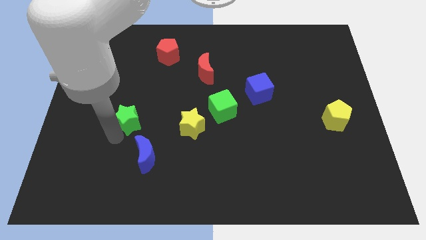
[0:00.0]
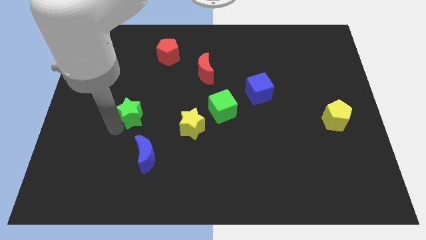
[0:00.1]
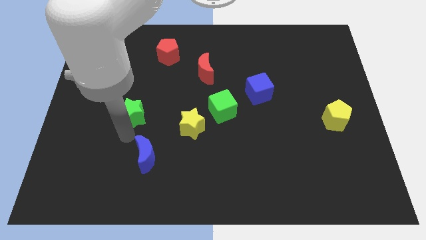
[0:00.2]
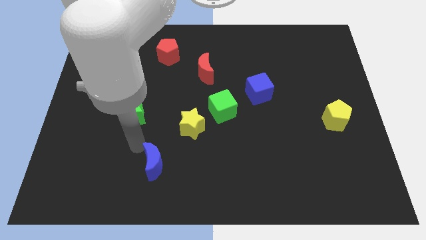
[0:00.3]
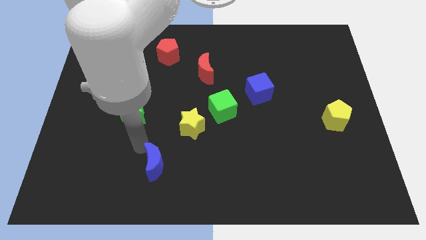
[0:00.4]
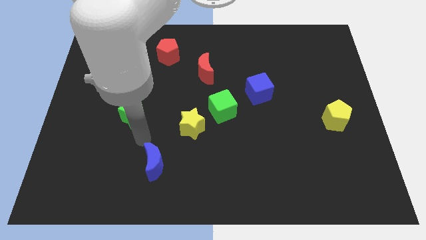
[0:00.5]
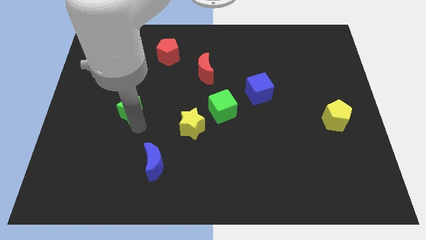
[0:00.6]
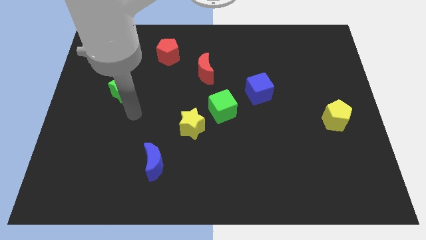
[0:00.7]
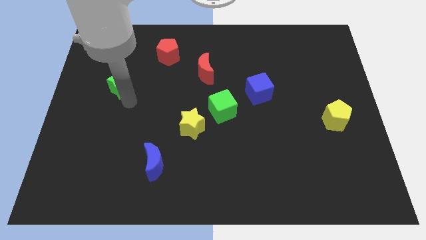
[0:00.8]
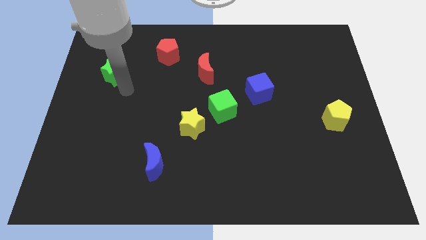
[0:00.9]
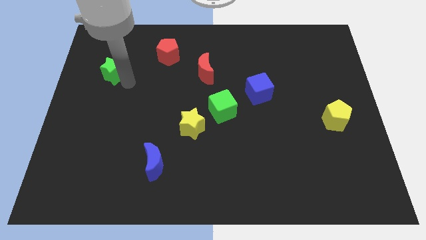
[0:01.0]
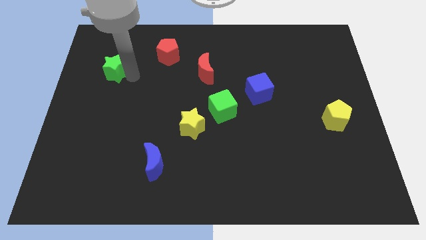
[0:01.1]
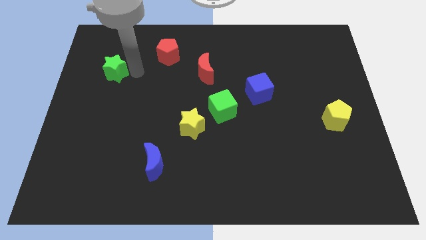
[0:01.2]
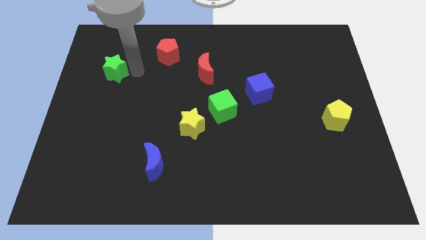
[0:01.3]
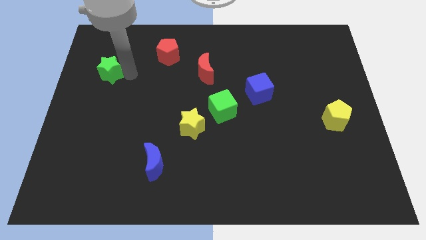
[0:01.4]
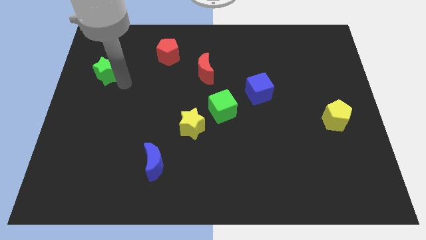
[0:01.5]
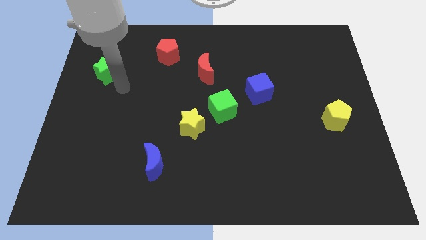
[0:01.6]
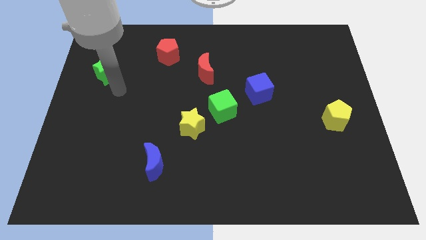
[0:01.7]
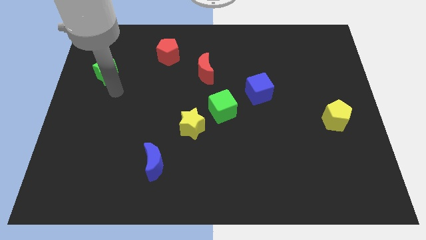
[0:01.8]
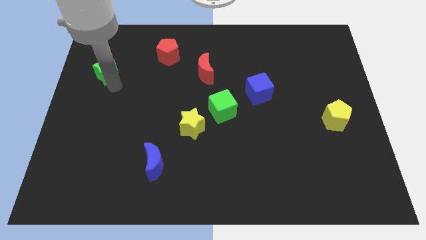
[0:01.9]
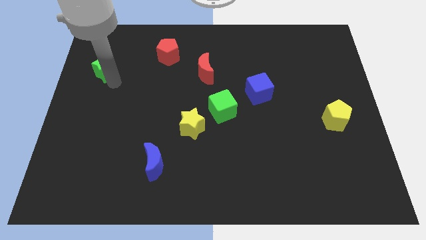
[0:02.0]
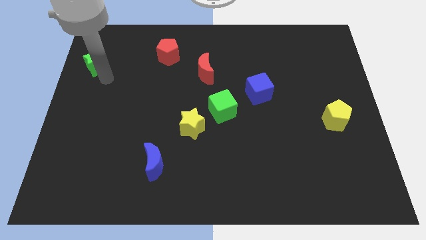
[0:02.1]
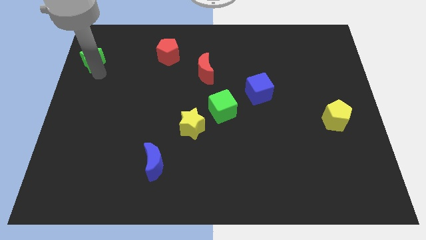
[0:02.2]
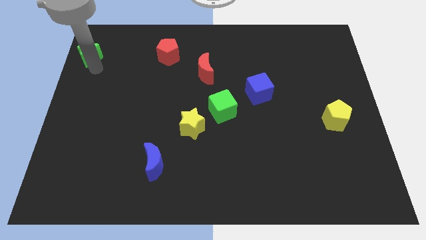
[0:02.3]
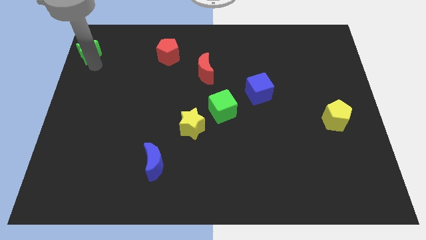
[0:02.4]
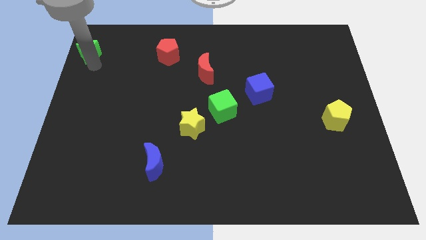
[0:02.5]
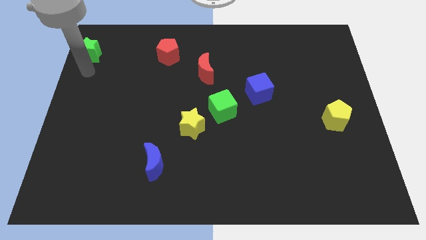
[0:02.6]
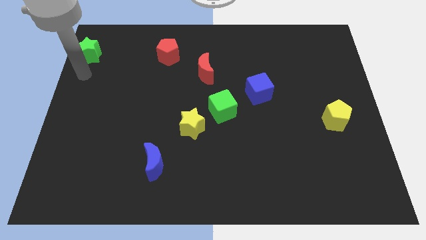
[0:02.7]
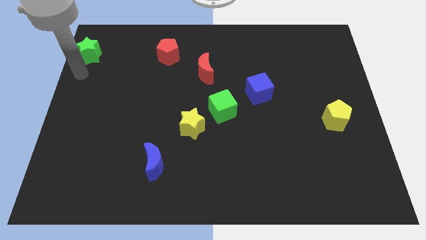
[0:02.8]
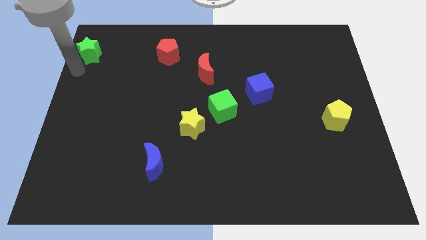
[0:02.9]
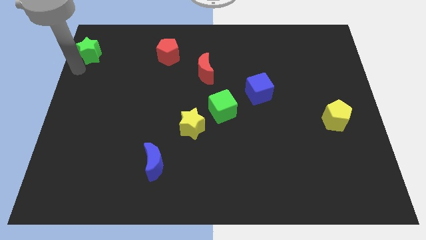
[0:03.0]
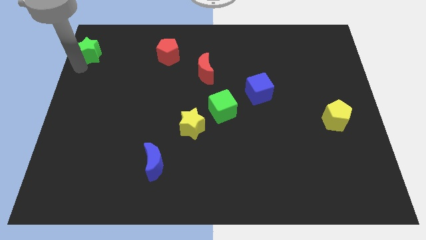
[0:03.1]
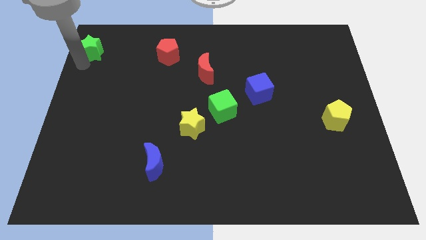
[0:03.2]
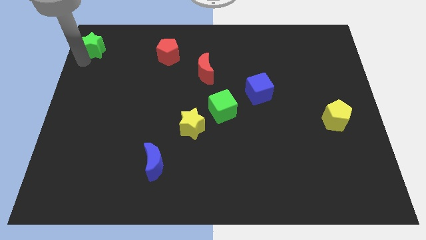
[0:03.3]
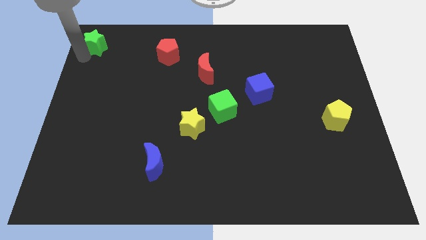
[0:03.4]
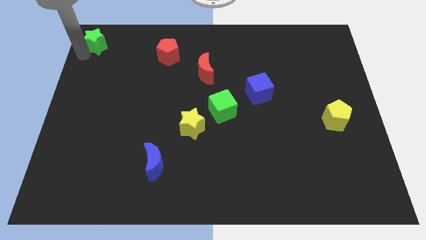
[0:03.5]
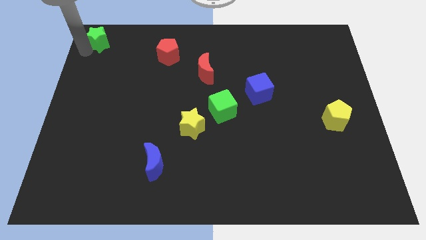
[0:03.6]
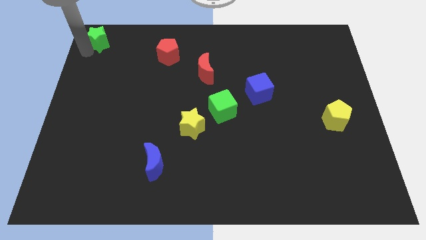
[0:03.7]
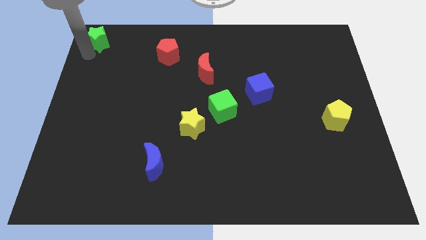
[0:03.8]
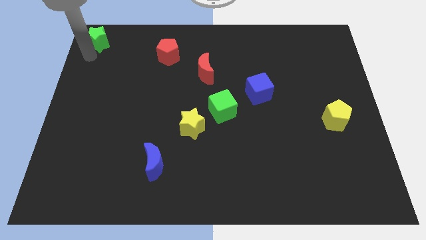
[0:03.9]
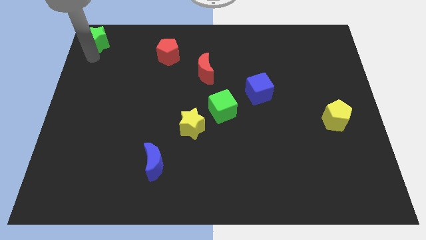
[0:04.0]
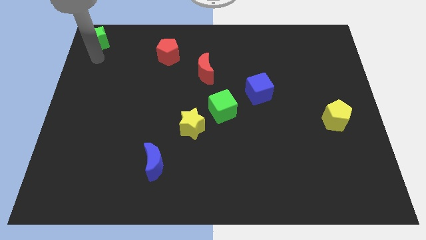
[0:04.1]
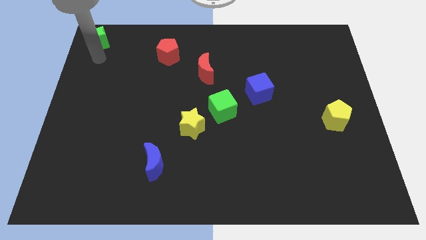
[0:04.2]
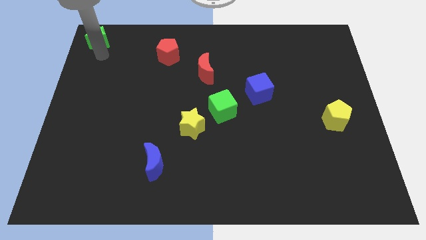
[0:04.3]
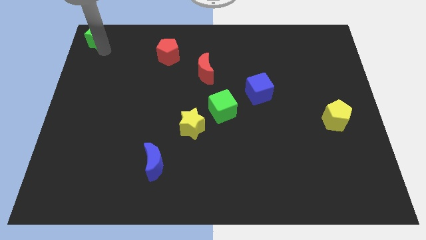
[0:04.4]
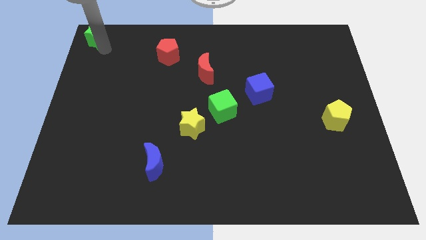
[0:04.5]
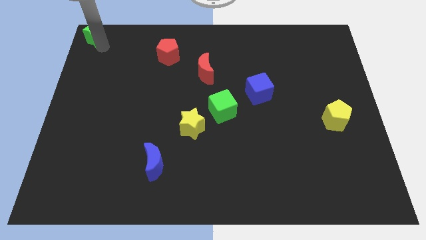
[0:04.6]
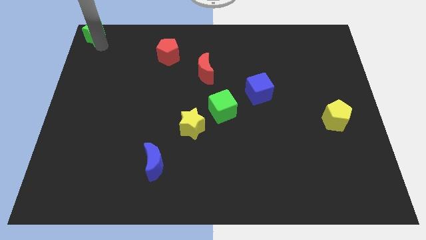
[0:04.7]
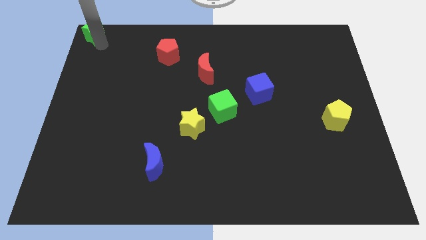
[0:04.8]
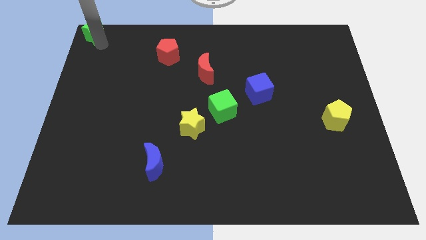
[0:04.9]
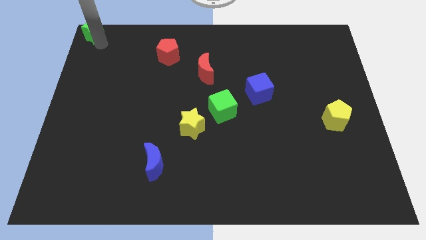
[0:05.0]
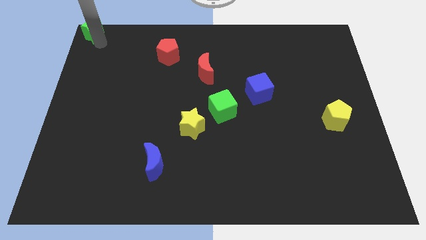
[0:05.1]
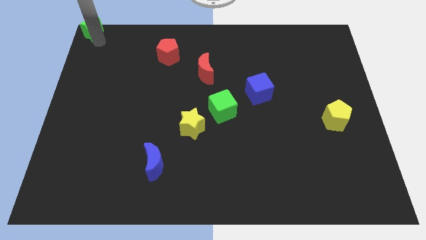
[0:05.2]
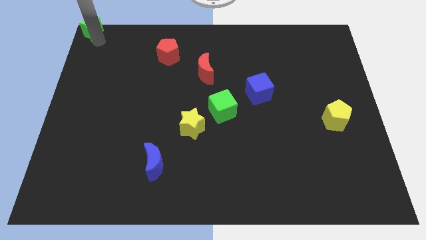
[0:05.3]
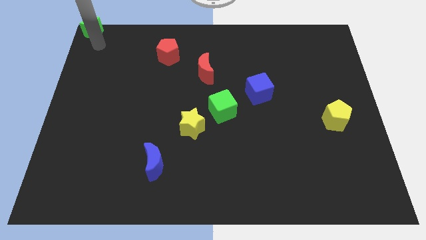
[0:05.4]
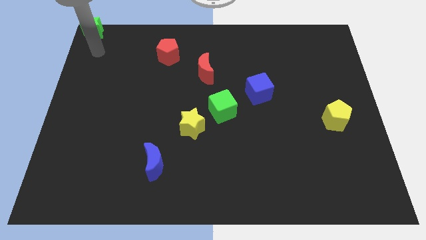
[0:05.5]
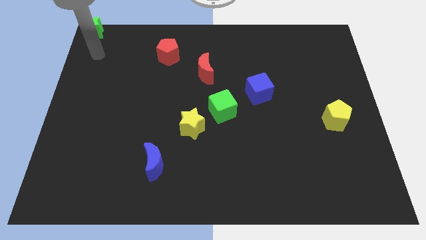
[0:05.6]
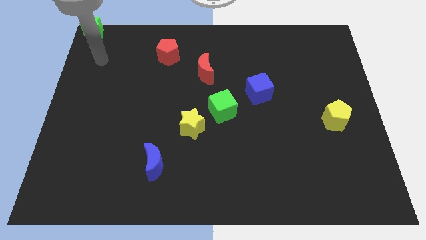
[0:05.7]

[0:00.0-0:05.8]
move the green star to the top left corner

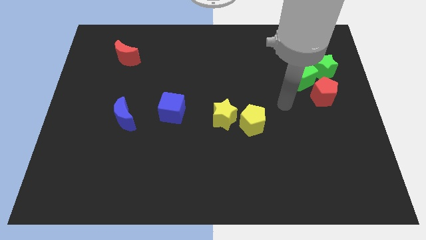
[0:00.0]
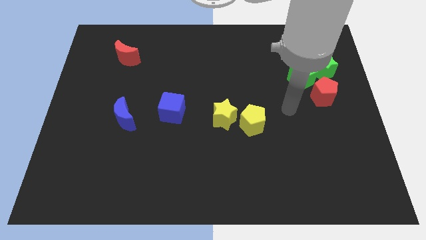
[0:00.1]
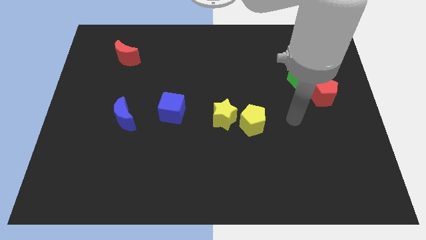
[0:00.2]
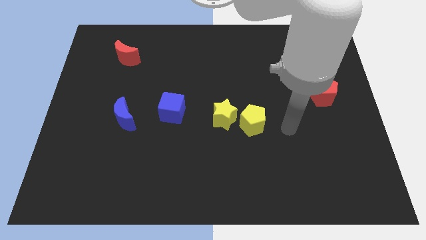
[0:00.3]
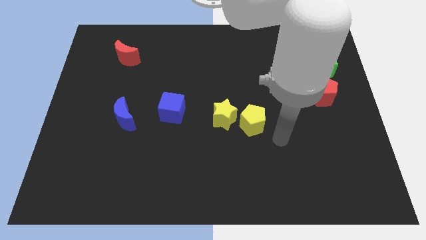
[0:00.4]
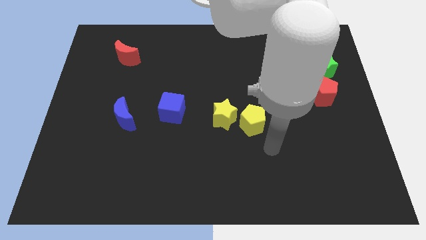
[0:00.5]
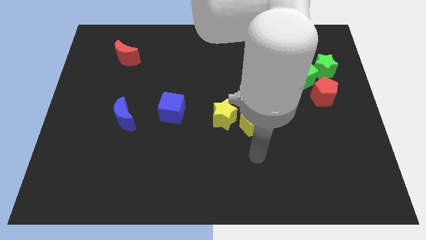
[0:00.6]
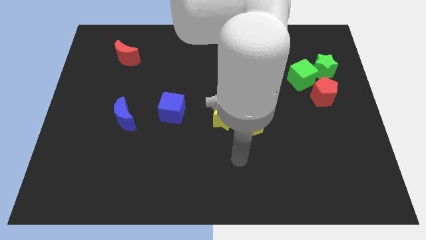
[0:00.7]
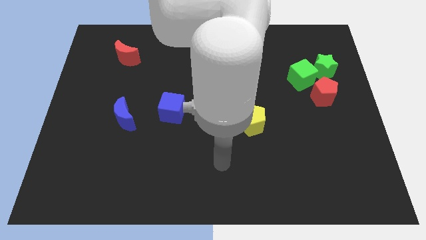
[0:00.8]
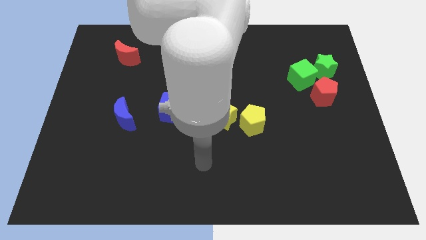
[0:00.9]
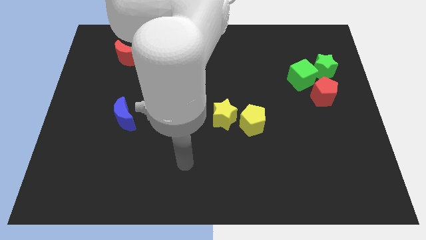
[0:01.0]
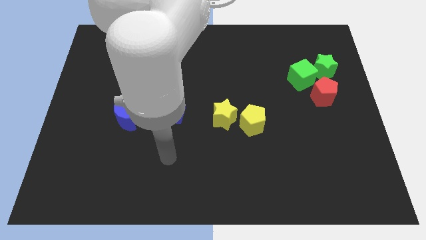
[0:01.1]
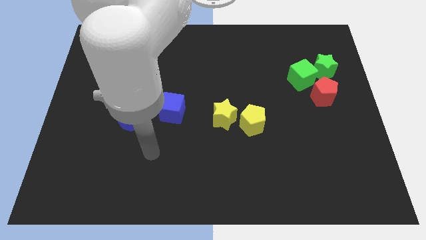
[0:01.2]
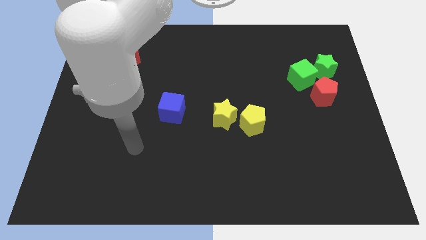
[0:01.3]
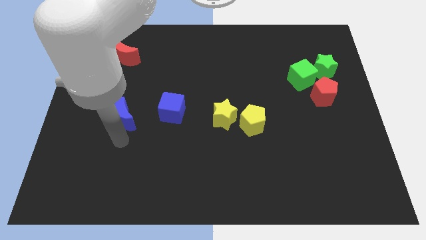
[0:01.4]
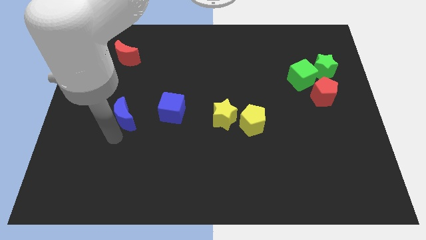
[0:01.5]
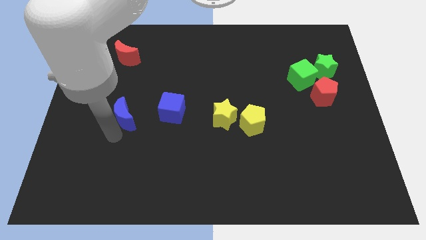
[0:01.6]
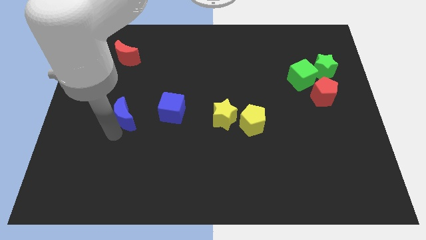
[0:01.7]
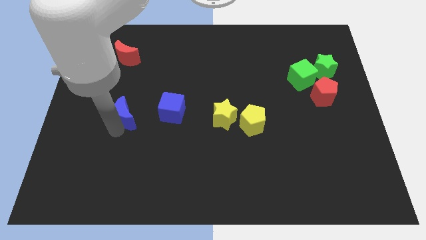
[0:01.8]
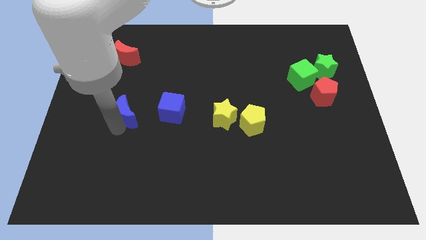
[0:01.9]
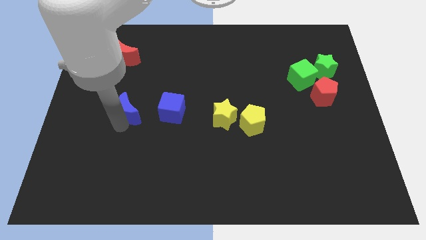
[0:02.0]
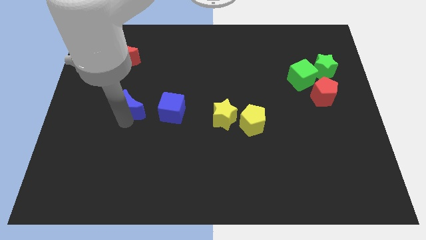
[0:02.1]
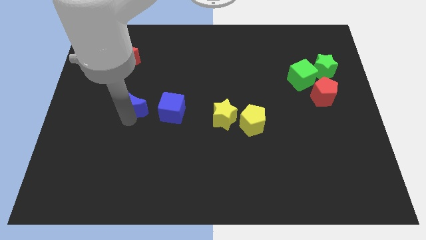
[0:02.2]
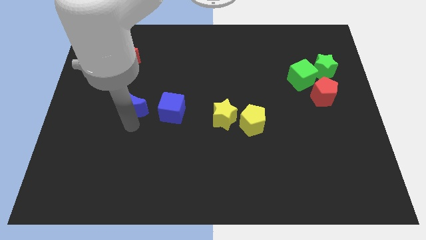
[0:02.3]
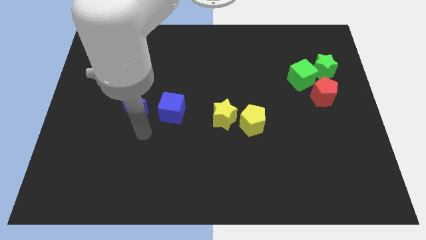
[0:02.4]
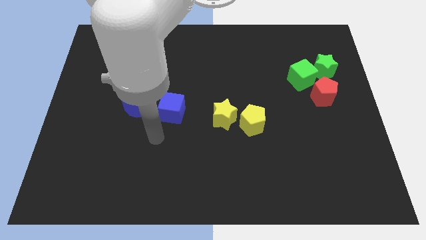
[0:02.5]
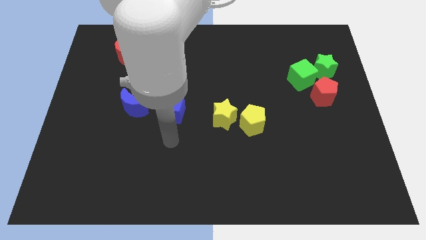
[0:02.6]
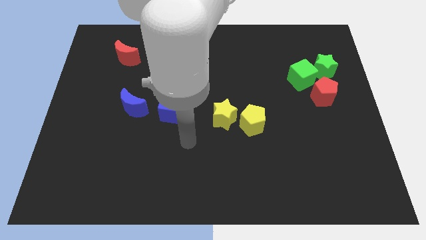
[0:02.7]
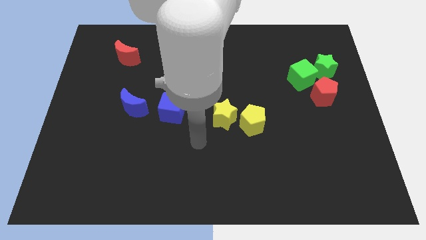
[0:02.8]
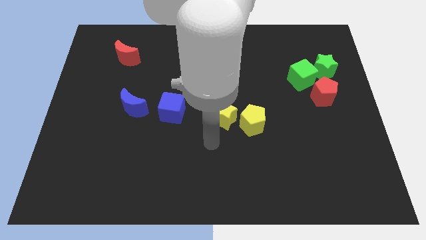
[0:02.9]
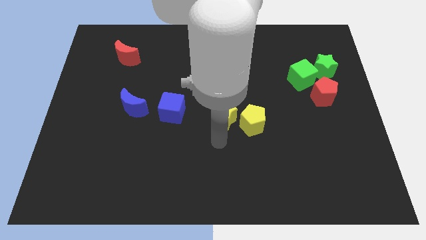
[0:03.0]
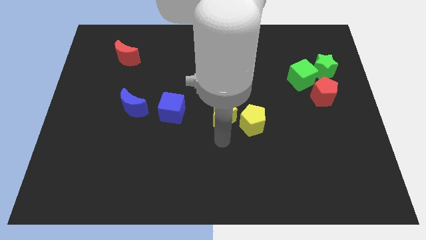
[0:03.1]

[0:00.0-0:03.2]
put the blue crescent horizontally to the left of the blue cube
